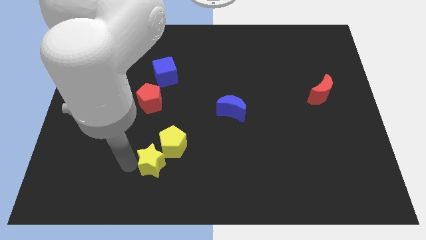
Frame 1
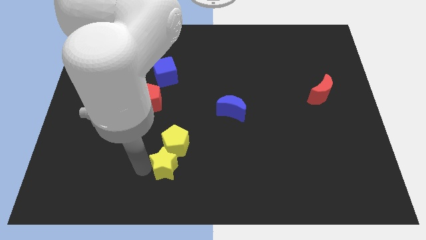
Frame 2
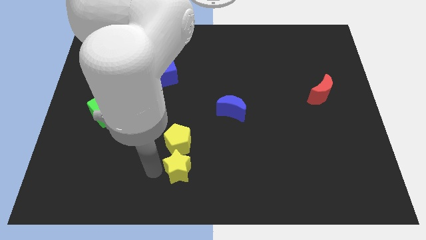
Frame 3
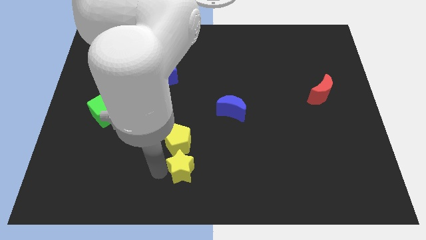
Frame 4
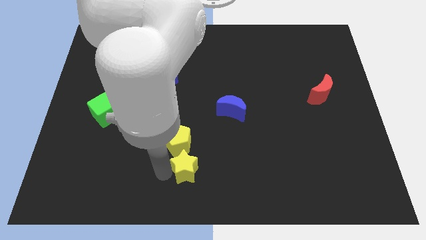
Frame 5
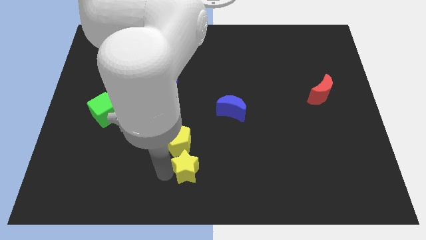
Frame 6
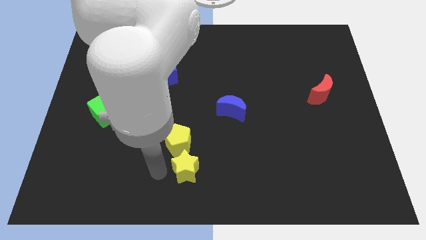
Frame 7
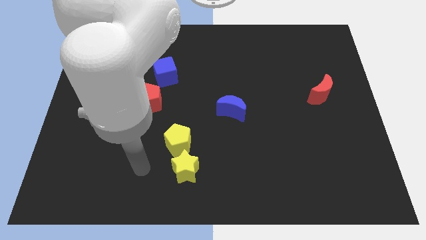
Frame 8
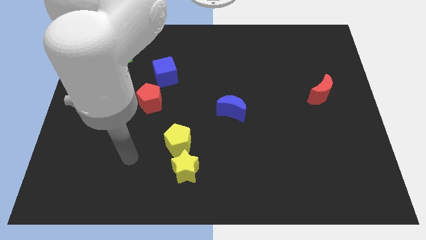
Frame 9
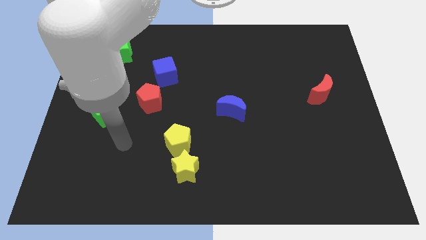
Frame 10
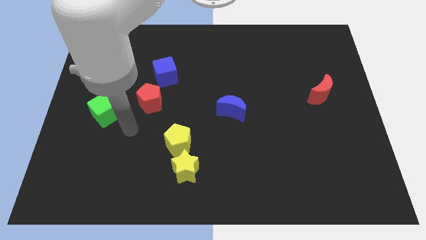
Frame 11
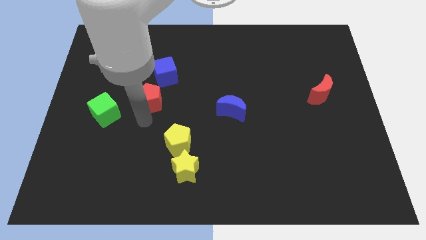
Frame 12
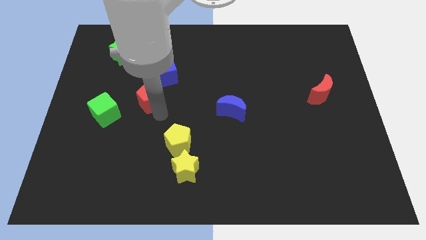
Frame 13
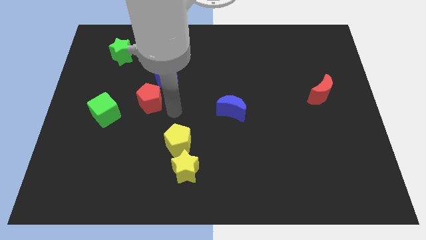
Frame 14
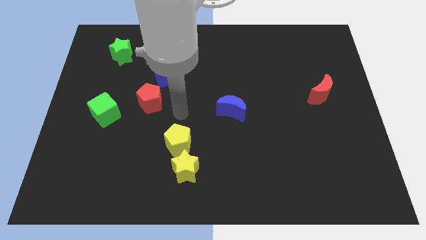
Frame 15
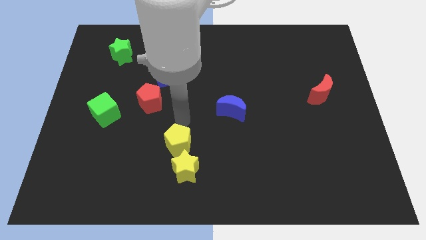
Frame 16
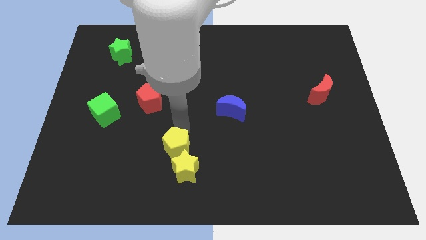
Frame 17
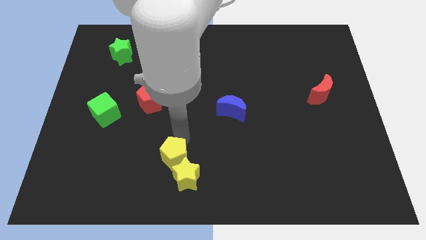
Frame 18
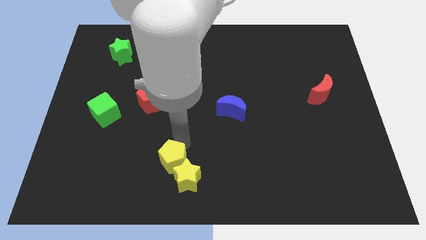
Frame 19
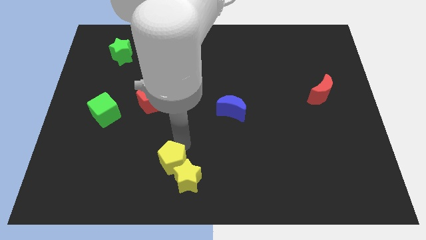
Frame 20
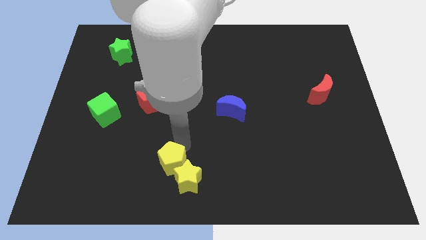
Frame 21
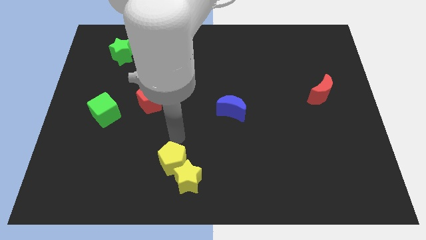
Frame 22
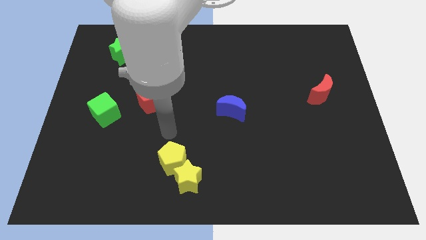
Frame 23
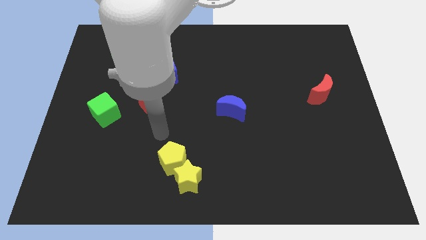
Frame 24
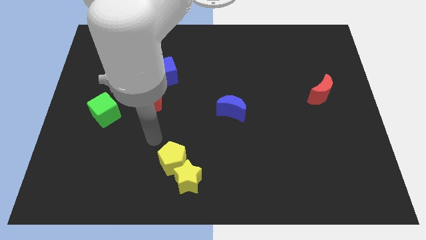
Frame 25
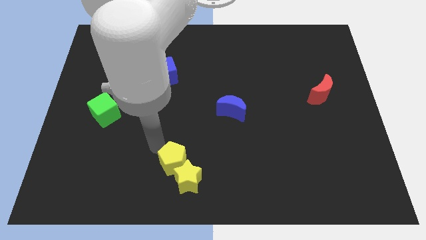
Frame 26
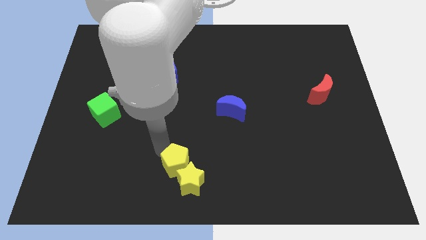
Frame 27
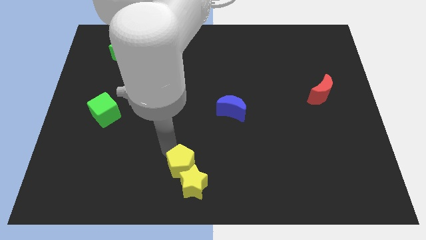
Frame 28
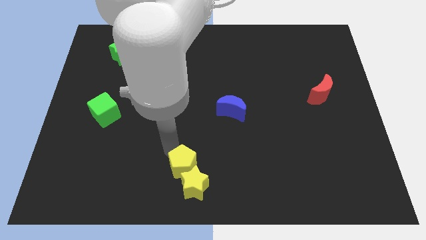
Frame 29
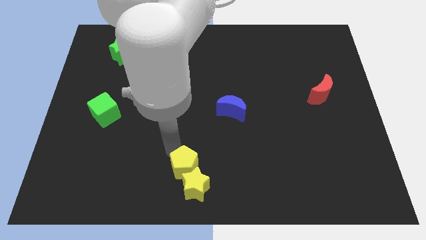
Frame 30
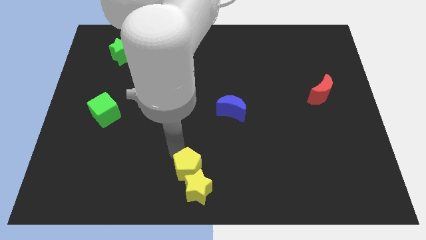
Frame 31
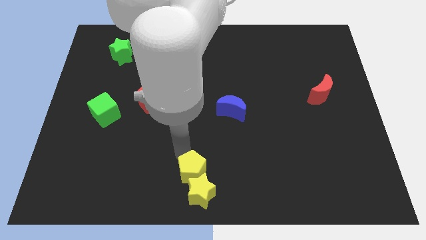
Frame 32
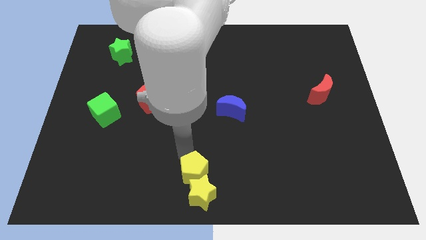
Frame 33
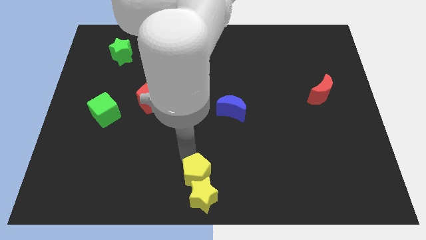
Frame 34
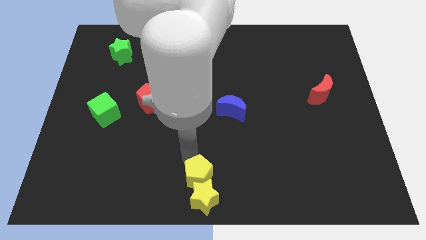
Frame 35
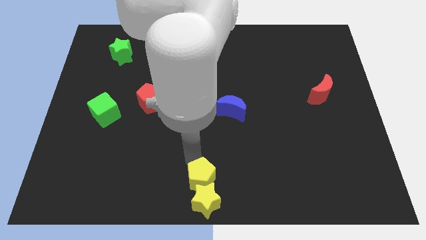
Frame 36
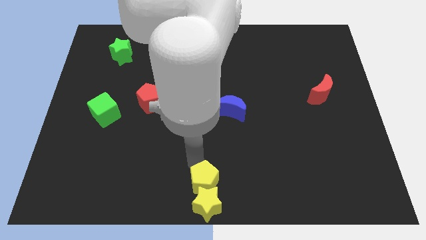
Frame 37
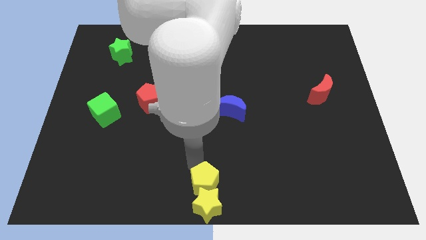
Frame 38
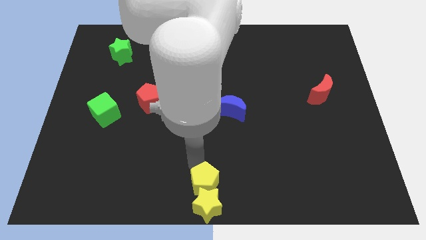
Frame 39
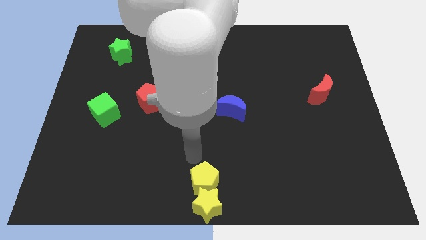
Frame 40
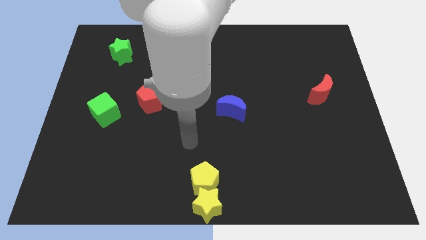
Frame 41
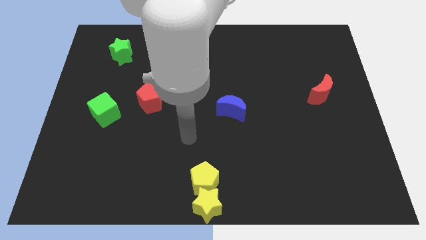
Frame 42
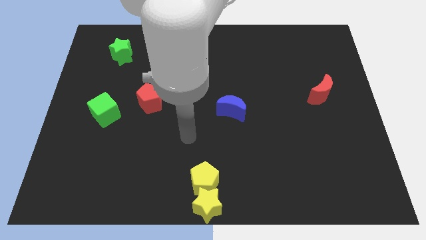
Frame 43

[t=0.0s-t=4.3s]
move the yellow blocks to the bottom center of the board

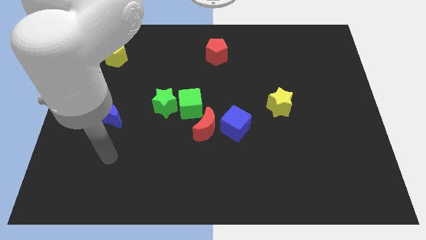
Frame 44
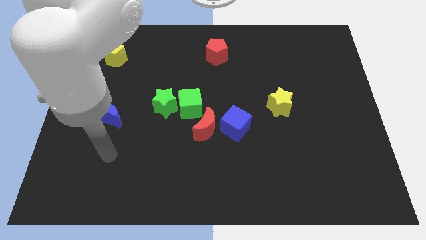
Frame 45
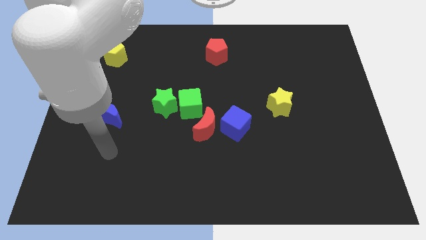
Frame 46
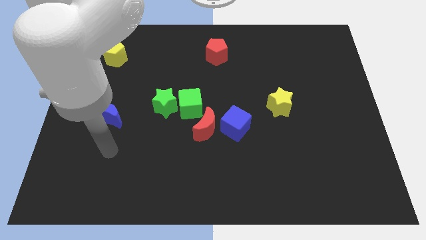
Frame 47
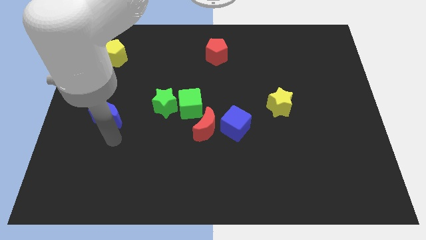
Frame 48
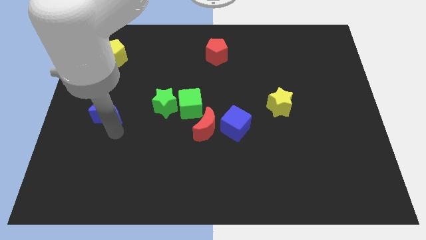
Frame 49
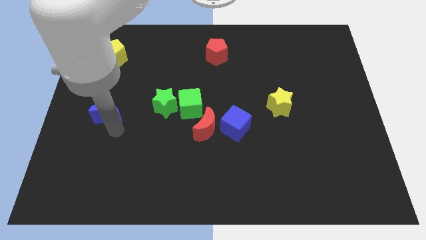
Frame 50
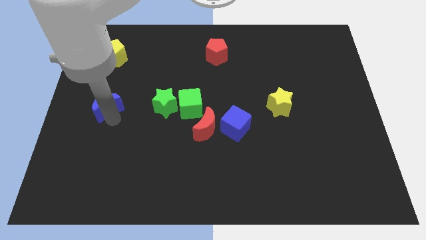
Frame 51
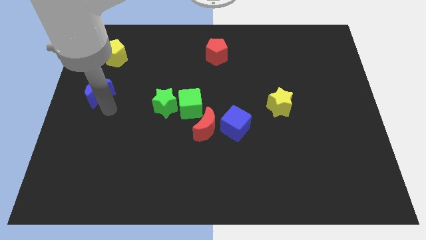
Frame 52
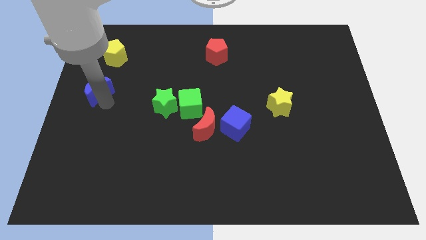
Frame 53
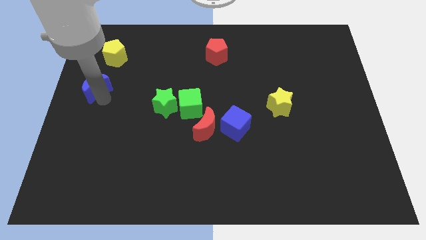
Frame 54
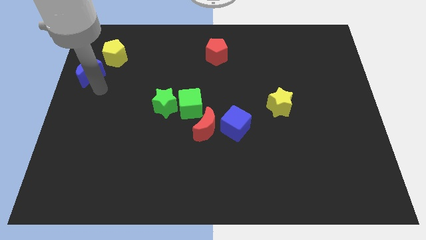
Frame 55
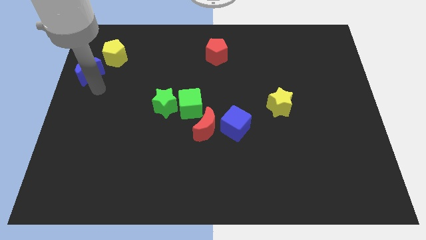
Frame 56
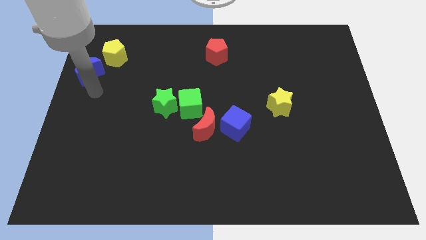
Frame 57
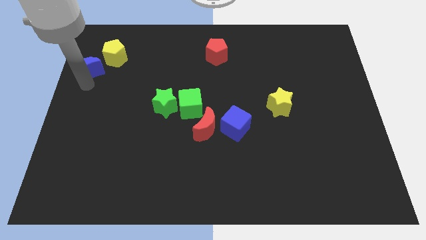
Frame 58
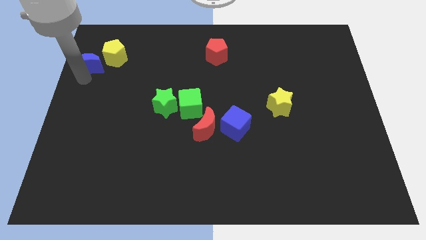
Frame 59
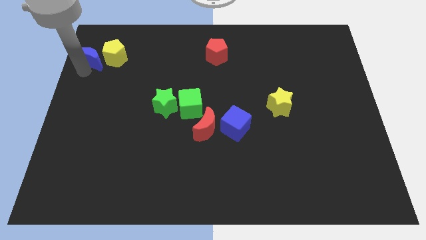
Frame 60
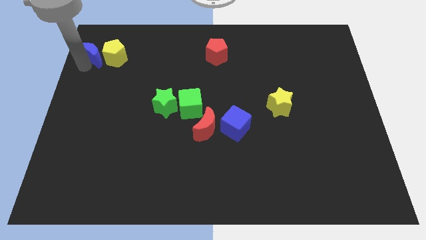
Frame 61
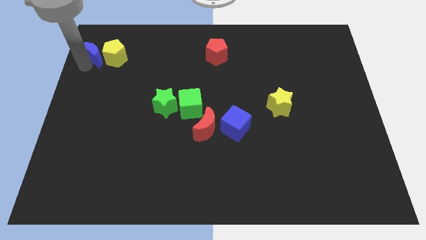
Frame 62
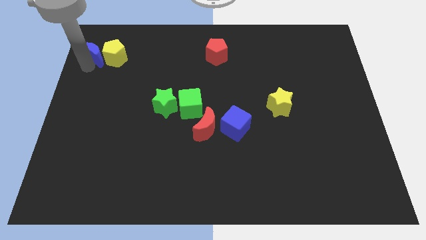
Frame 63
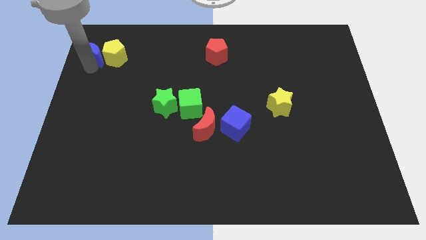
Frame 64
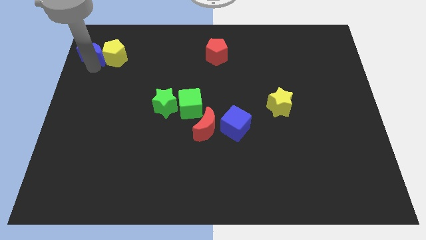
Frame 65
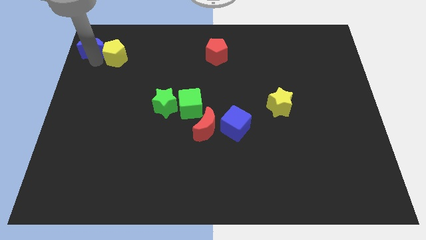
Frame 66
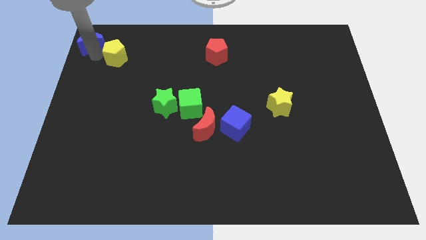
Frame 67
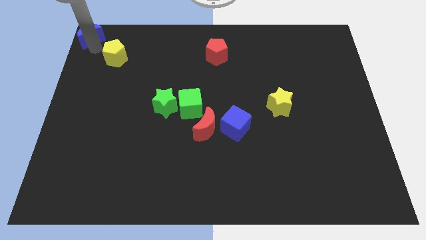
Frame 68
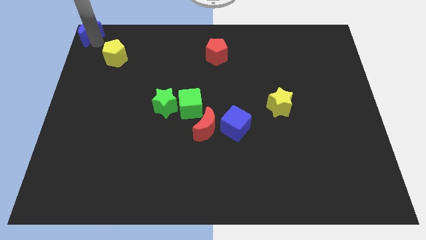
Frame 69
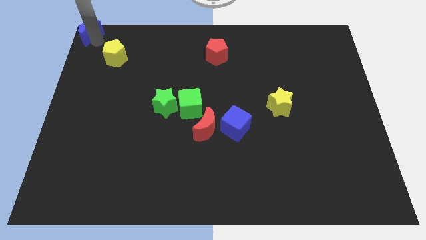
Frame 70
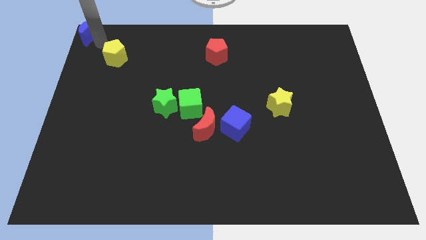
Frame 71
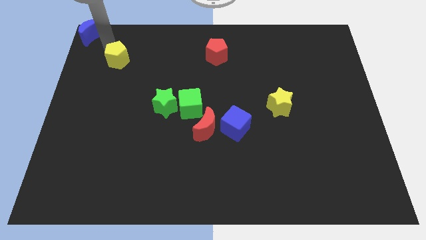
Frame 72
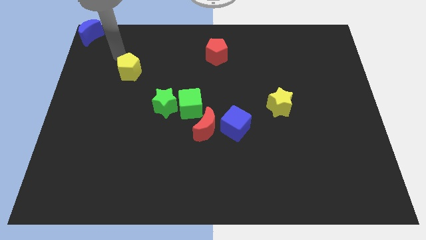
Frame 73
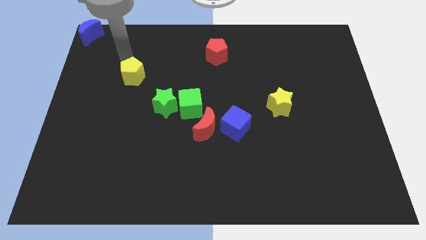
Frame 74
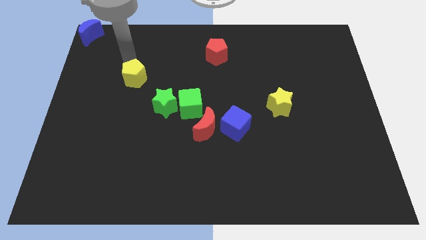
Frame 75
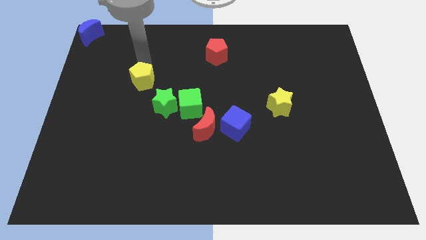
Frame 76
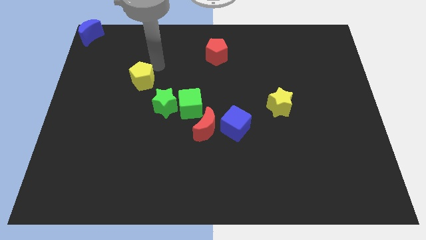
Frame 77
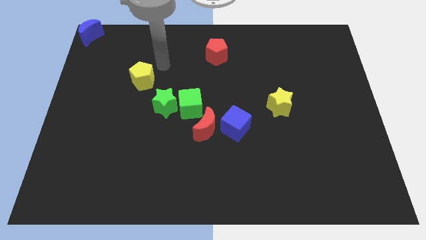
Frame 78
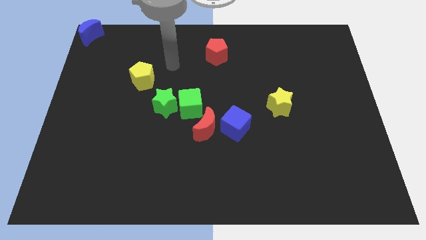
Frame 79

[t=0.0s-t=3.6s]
push the blue crescent and yellow pentagon in opposite directions

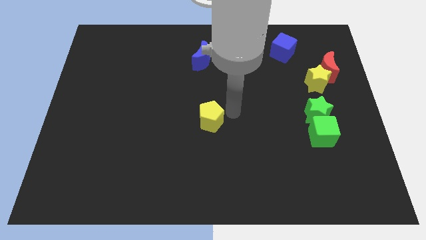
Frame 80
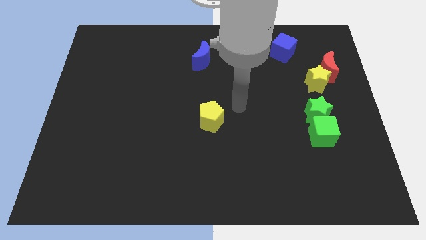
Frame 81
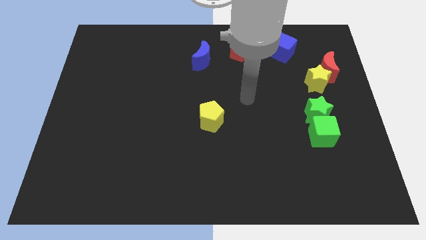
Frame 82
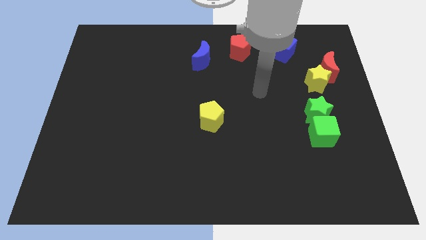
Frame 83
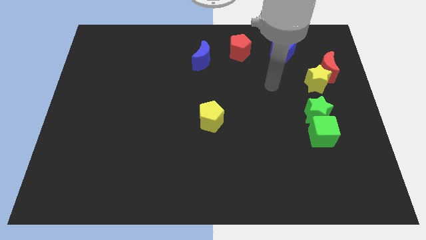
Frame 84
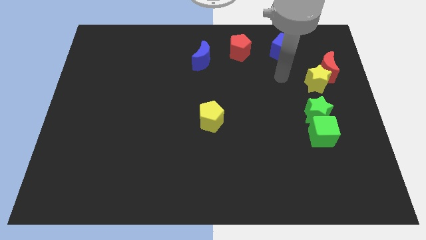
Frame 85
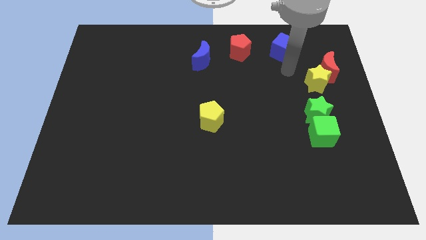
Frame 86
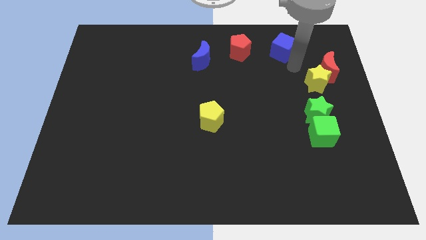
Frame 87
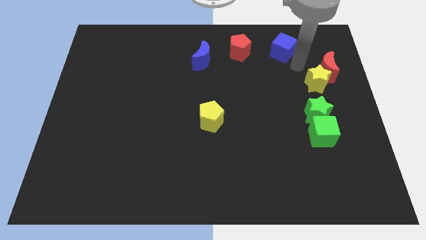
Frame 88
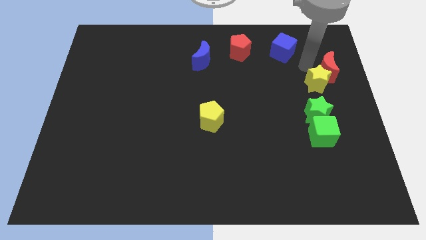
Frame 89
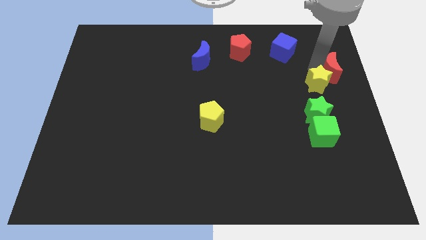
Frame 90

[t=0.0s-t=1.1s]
move your hand to the top of the yellow star
